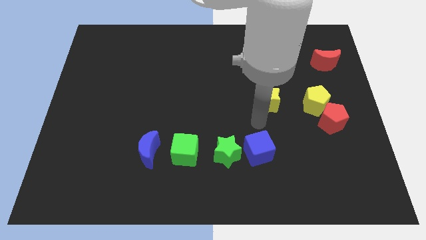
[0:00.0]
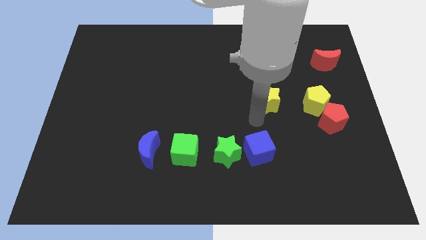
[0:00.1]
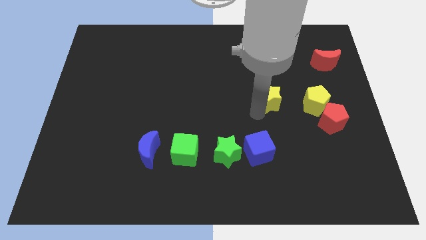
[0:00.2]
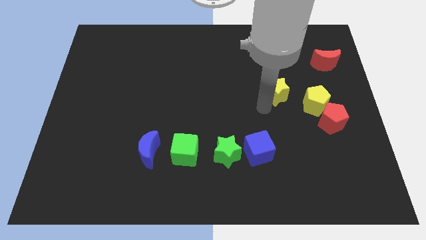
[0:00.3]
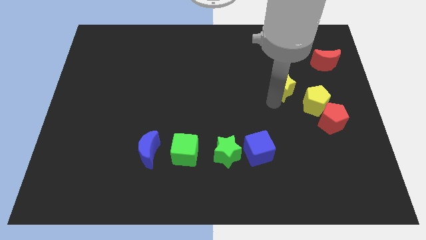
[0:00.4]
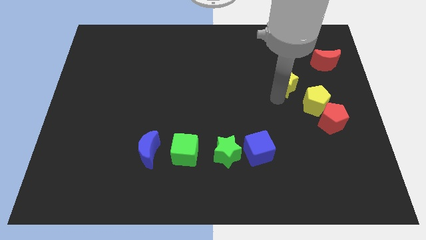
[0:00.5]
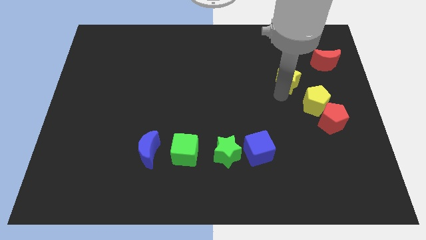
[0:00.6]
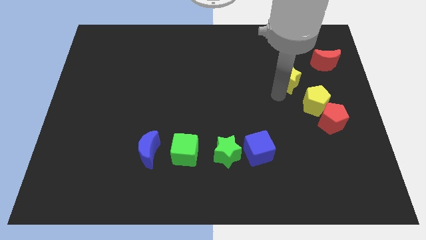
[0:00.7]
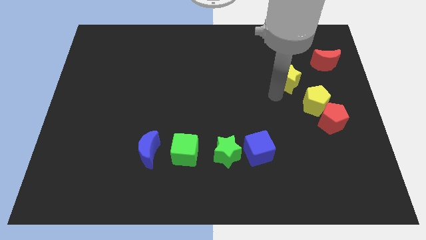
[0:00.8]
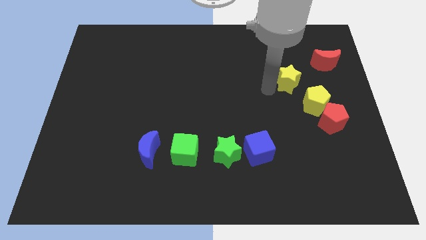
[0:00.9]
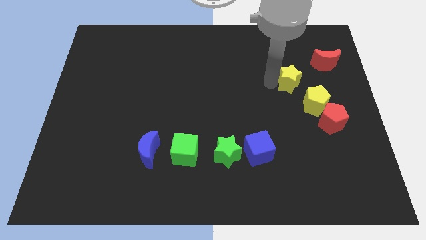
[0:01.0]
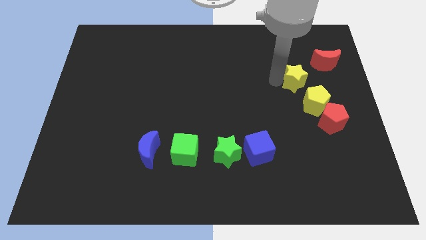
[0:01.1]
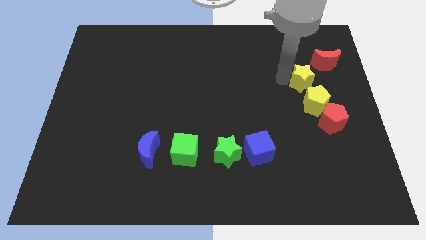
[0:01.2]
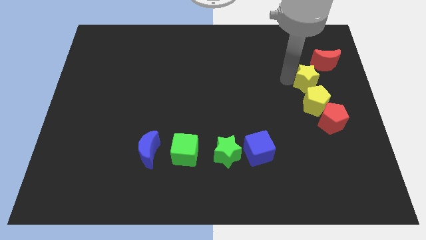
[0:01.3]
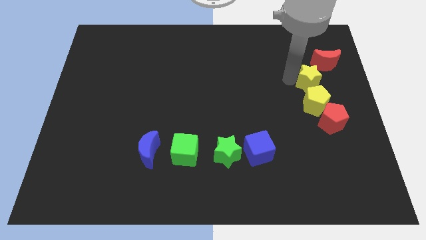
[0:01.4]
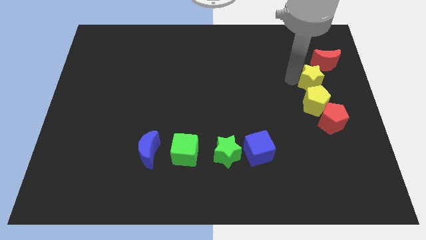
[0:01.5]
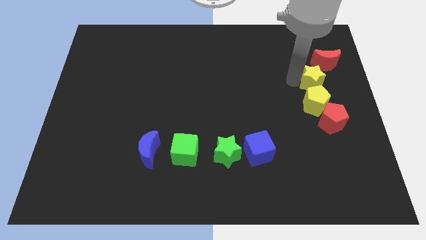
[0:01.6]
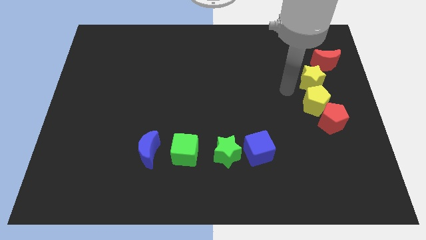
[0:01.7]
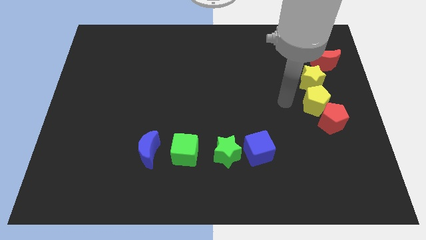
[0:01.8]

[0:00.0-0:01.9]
push the yellow star to the top side of the yellow pentagon

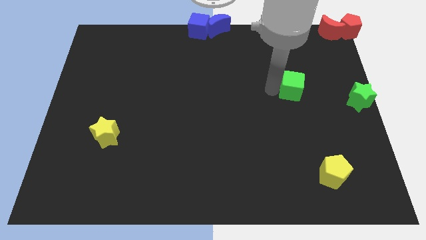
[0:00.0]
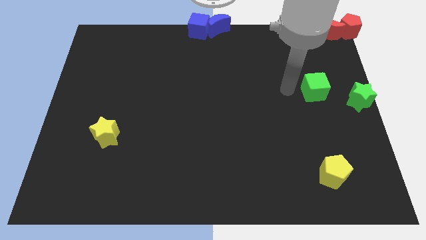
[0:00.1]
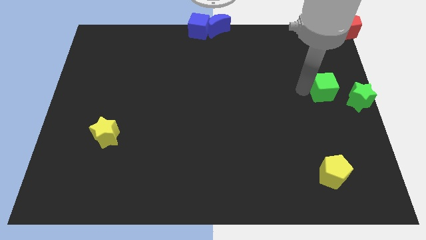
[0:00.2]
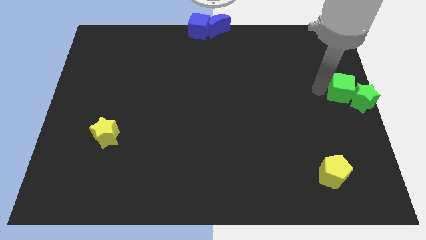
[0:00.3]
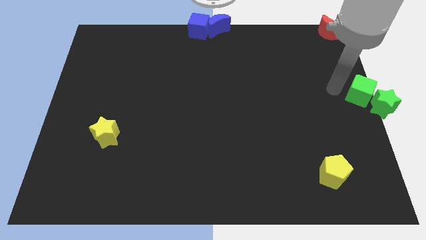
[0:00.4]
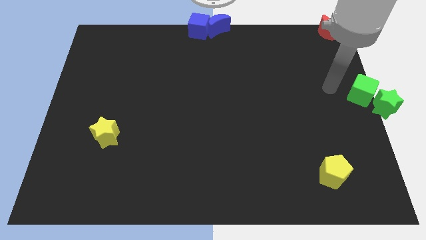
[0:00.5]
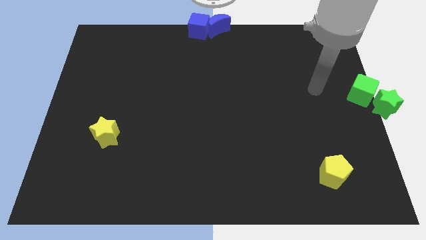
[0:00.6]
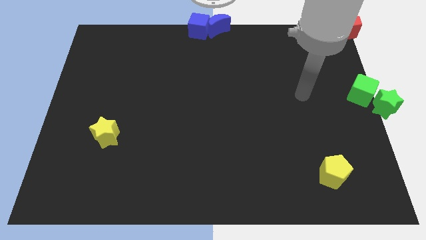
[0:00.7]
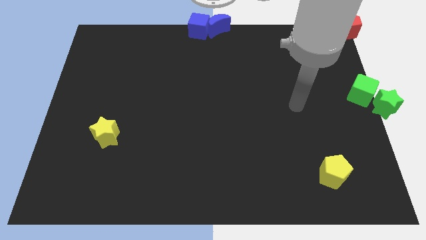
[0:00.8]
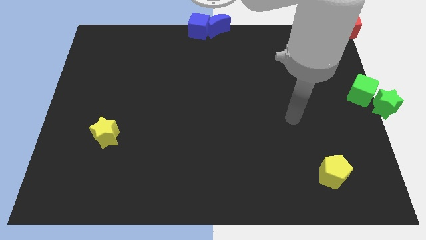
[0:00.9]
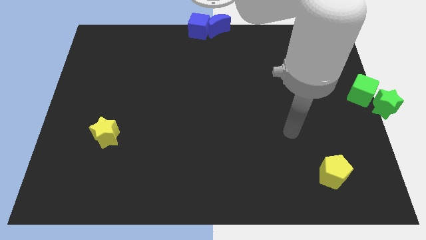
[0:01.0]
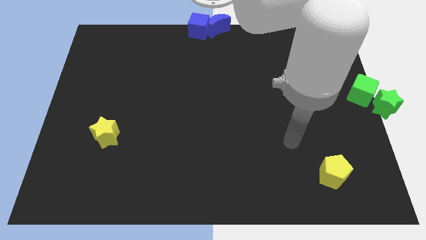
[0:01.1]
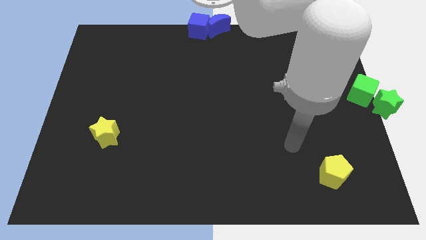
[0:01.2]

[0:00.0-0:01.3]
push the green cube into the green star

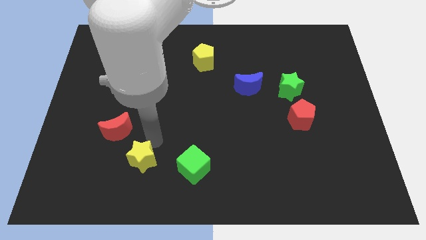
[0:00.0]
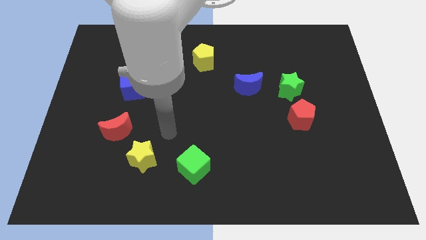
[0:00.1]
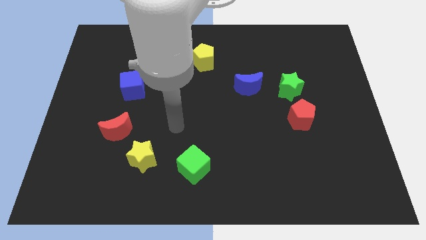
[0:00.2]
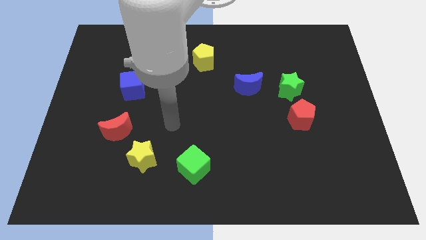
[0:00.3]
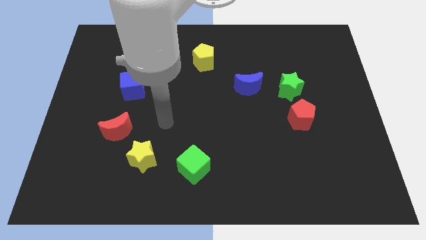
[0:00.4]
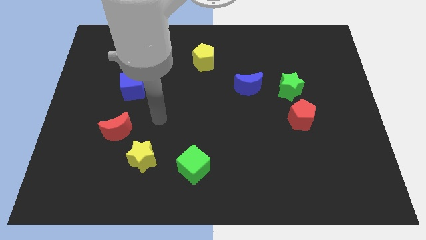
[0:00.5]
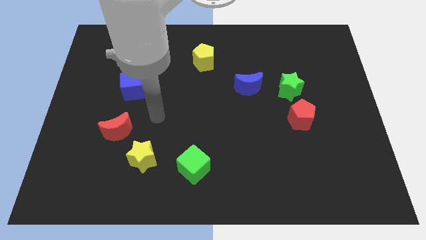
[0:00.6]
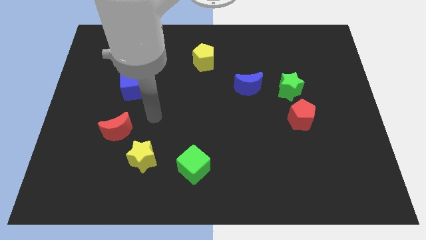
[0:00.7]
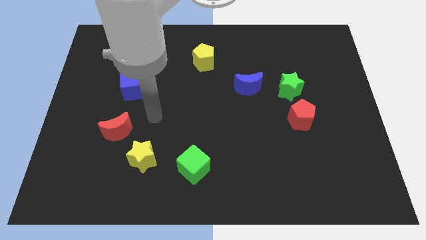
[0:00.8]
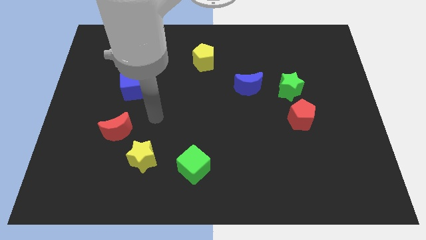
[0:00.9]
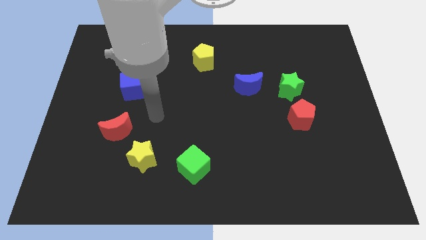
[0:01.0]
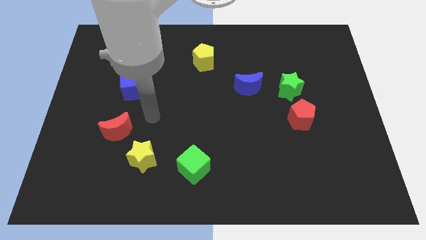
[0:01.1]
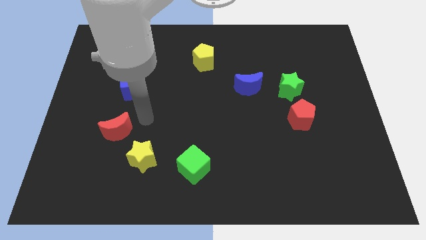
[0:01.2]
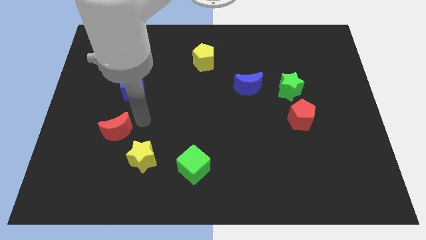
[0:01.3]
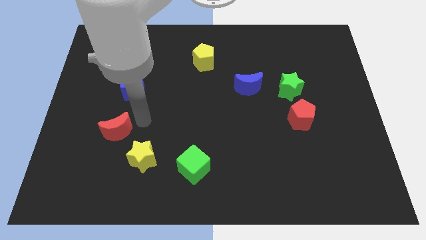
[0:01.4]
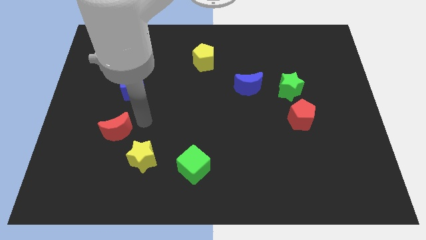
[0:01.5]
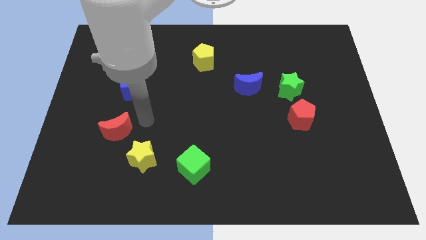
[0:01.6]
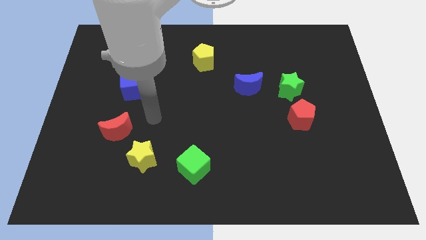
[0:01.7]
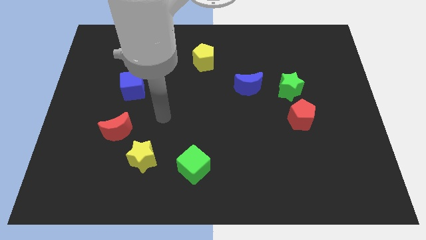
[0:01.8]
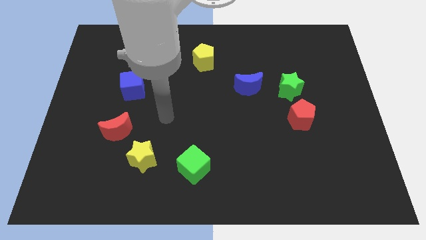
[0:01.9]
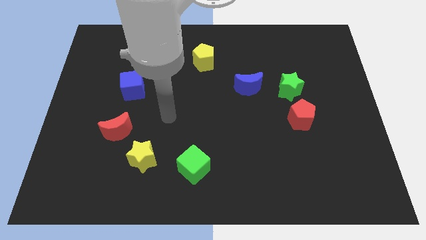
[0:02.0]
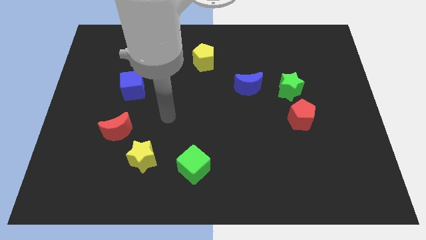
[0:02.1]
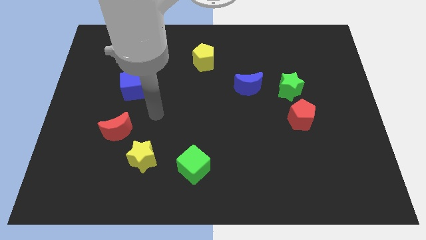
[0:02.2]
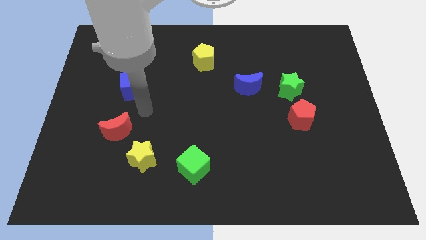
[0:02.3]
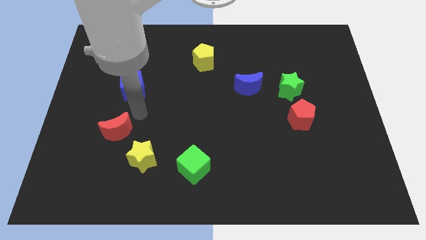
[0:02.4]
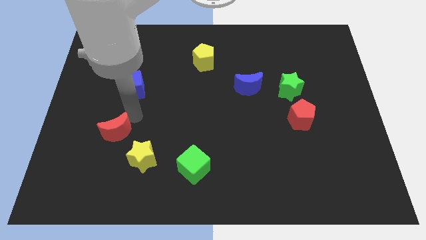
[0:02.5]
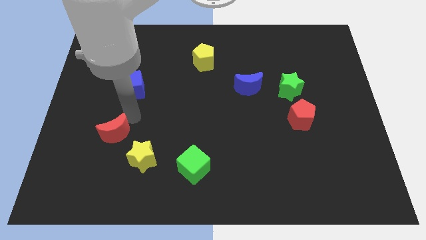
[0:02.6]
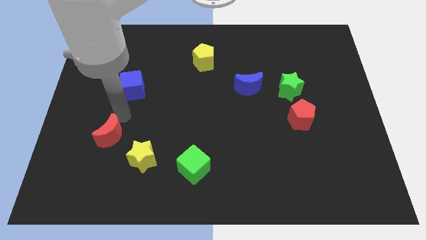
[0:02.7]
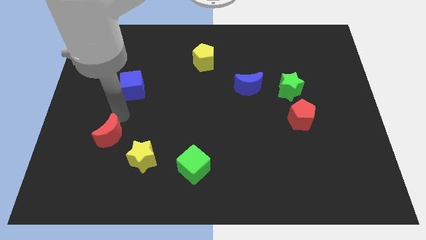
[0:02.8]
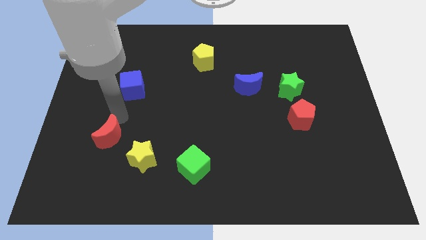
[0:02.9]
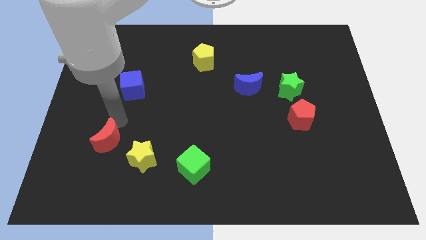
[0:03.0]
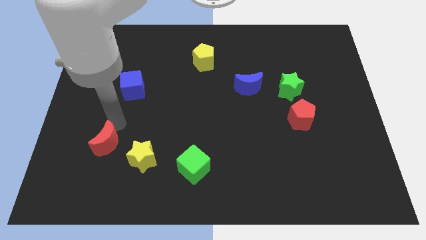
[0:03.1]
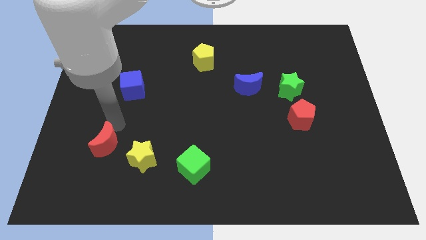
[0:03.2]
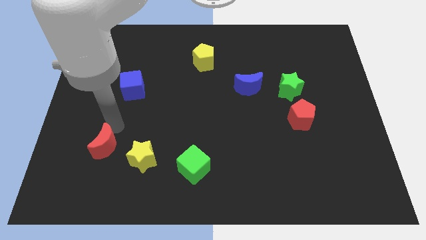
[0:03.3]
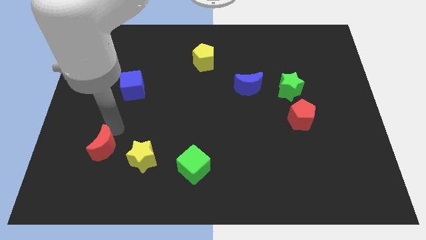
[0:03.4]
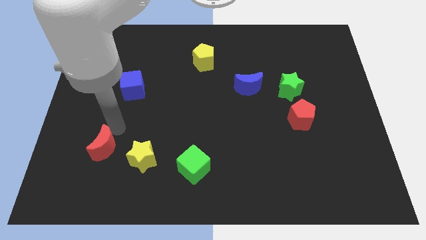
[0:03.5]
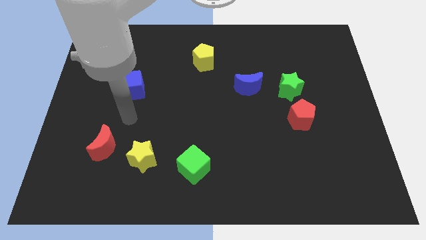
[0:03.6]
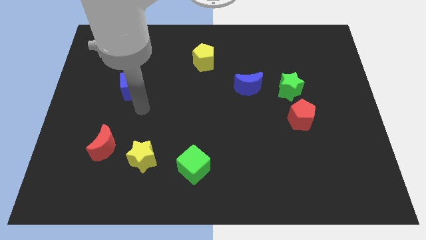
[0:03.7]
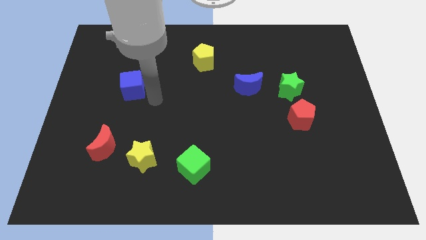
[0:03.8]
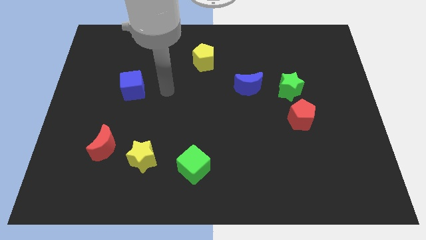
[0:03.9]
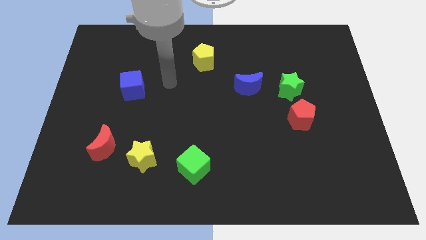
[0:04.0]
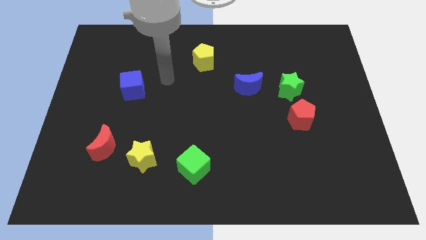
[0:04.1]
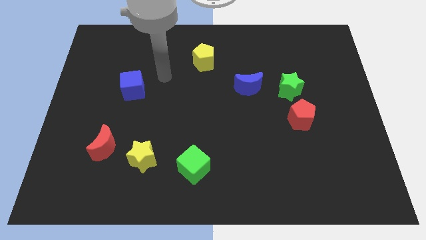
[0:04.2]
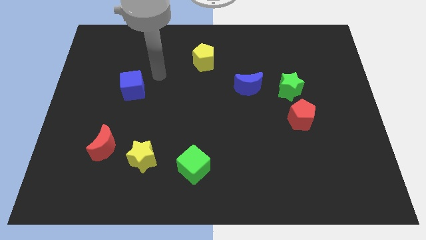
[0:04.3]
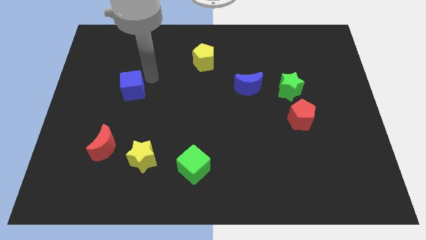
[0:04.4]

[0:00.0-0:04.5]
place the red crescent to the left side of yellow star and move away

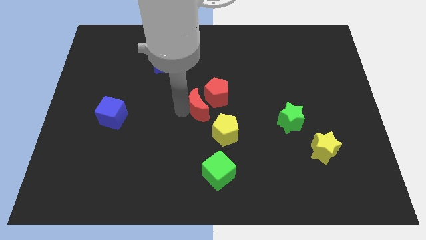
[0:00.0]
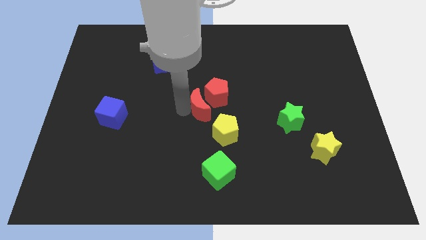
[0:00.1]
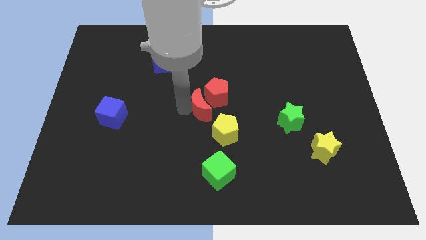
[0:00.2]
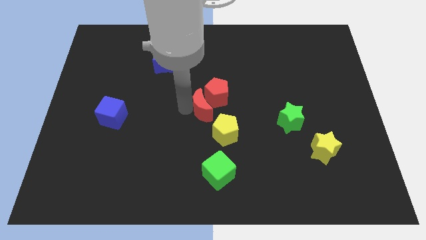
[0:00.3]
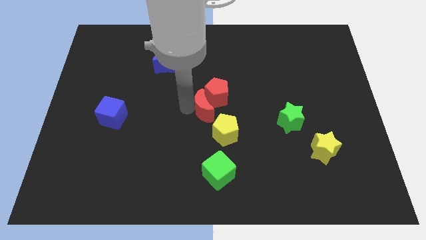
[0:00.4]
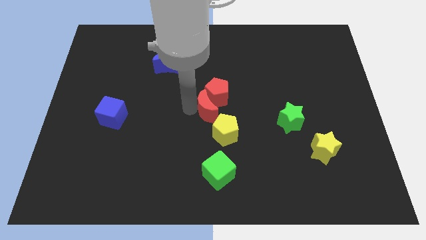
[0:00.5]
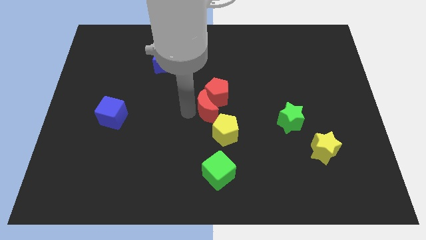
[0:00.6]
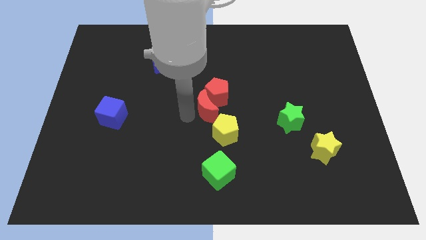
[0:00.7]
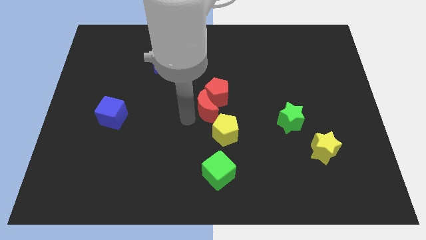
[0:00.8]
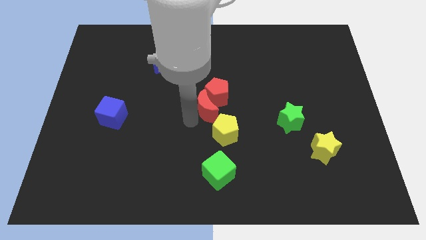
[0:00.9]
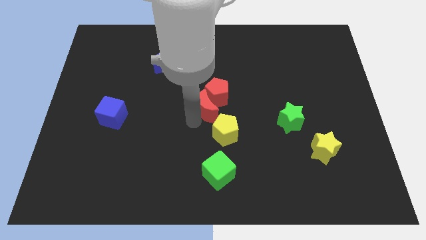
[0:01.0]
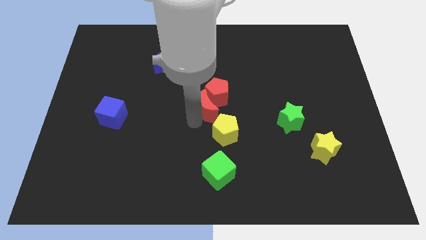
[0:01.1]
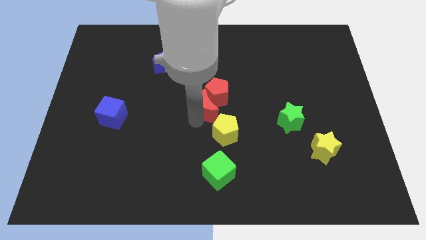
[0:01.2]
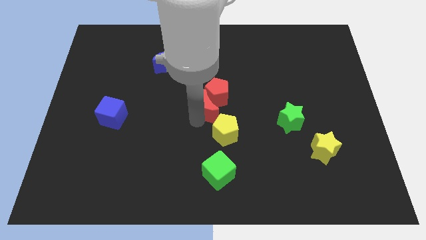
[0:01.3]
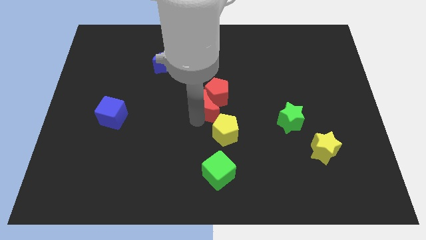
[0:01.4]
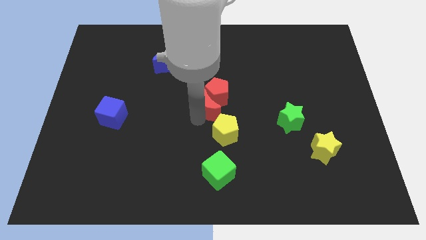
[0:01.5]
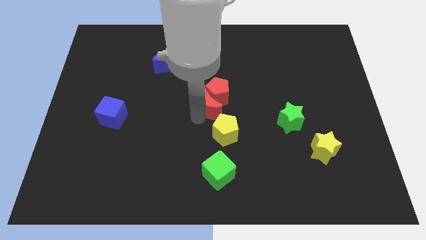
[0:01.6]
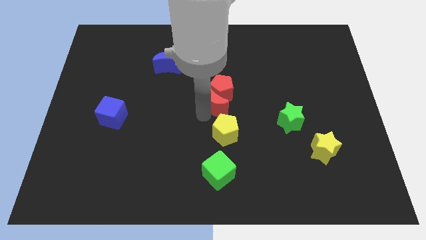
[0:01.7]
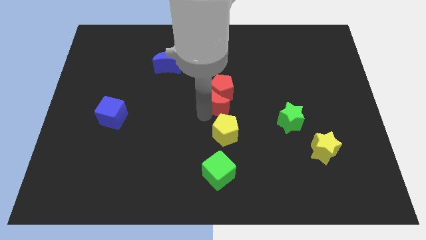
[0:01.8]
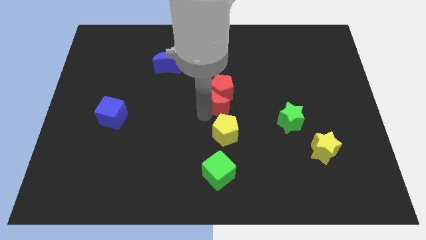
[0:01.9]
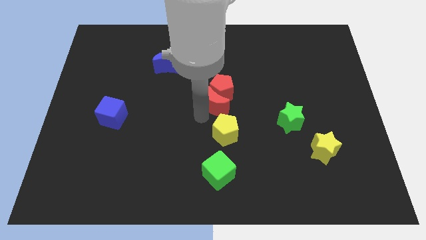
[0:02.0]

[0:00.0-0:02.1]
push the red crescent into the red pentagon
